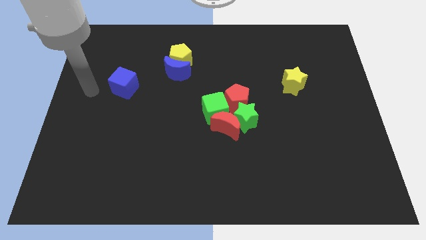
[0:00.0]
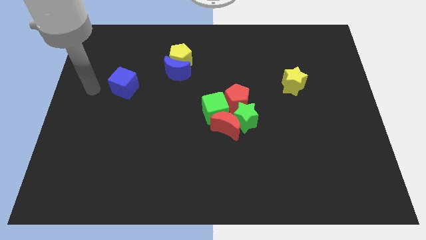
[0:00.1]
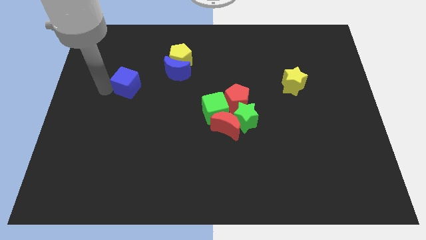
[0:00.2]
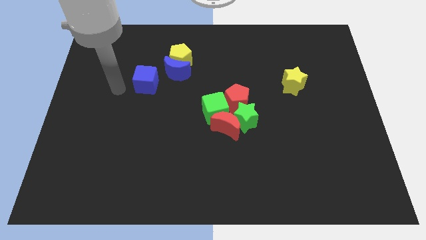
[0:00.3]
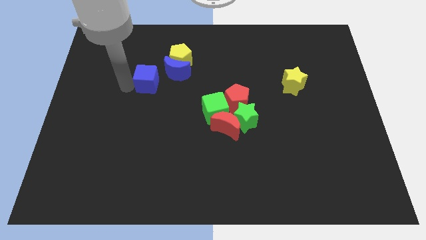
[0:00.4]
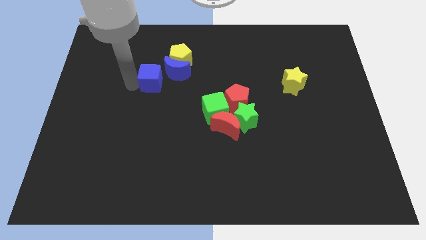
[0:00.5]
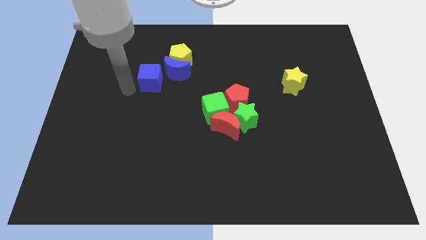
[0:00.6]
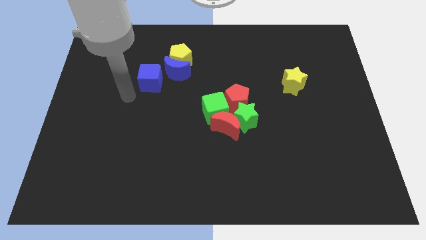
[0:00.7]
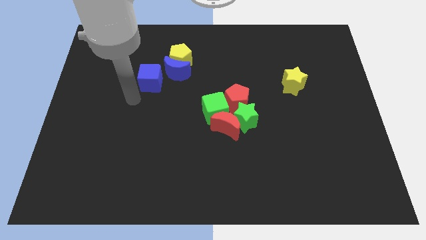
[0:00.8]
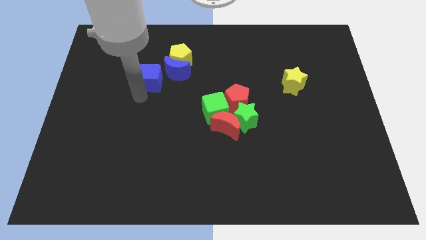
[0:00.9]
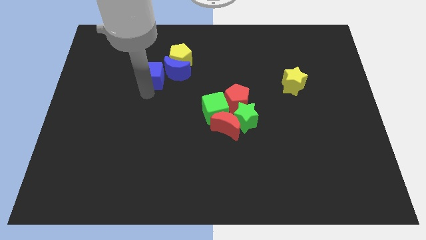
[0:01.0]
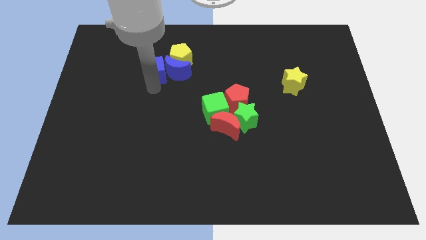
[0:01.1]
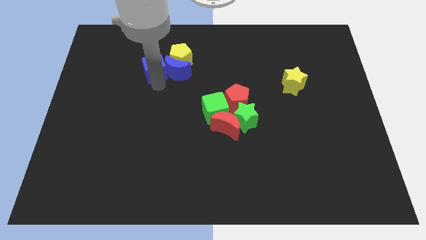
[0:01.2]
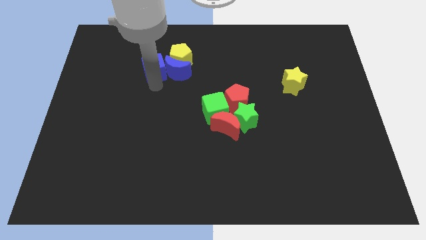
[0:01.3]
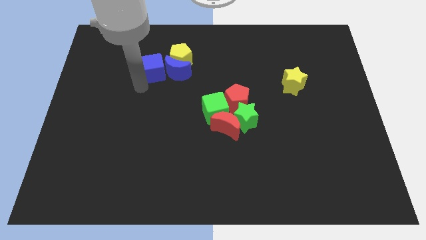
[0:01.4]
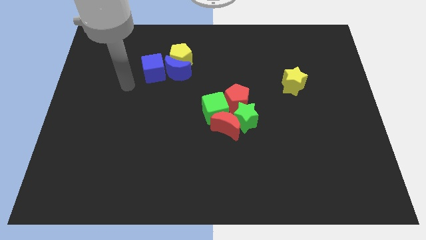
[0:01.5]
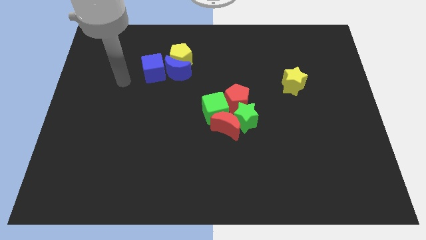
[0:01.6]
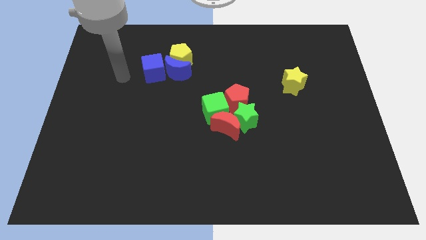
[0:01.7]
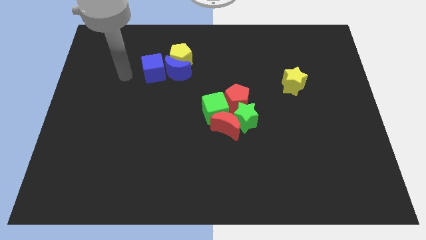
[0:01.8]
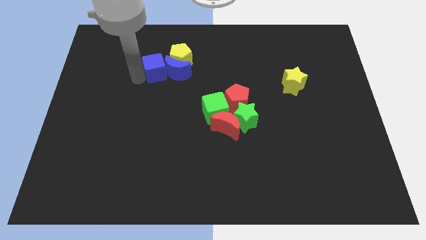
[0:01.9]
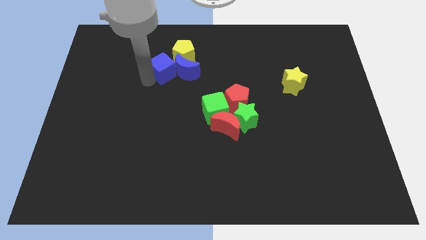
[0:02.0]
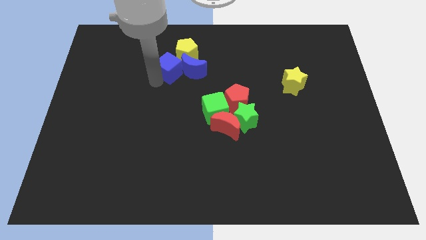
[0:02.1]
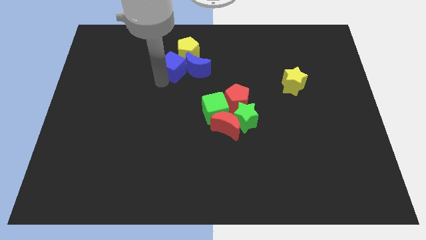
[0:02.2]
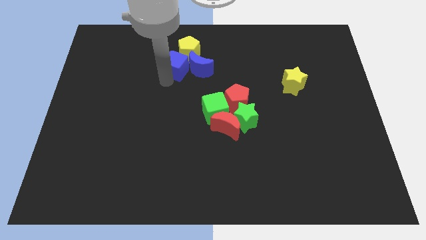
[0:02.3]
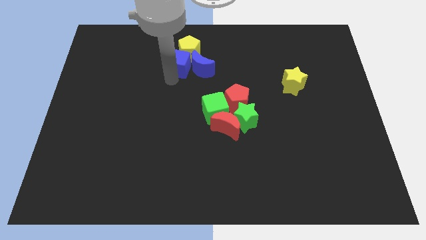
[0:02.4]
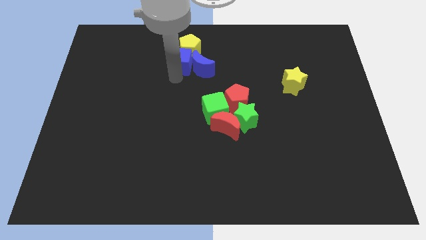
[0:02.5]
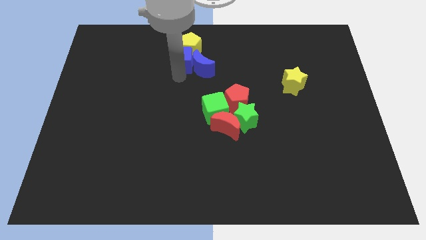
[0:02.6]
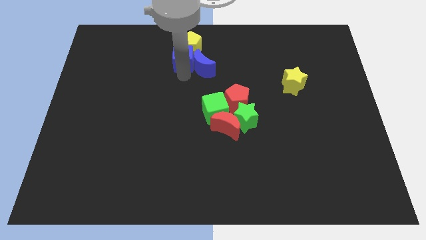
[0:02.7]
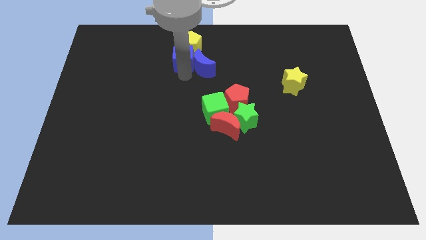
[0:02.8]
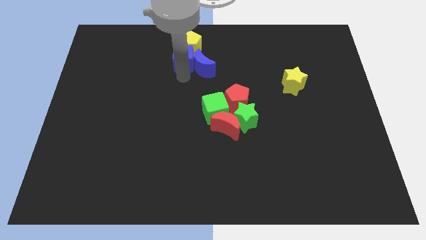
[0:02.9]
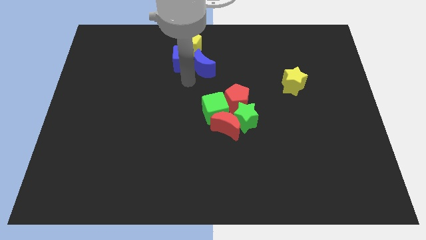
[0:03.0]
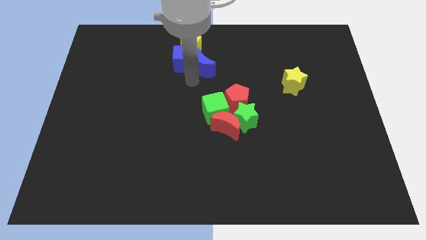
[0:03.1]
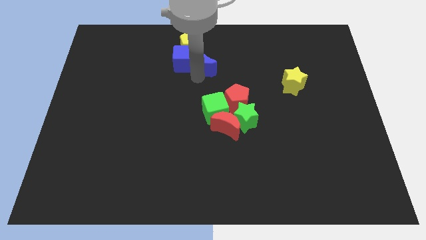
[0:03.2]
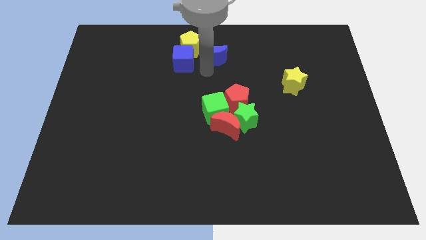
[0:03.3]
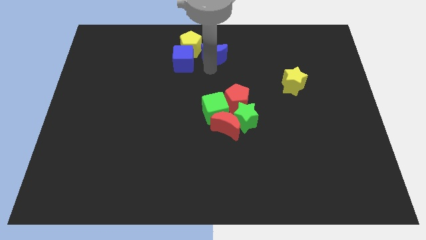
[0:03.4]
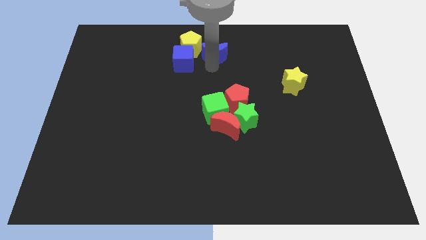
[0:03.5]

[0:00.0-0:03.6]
push blue cube below yellow pentagon

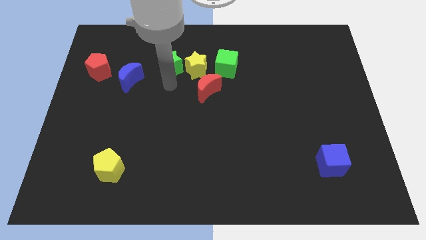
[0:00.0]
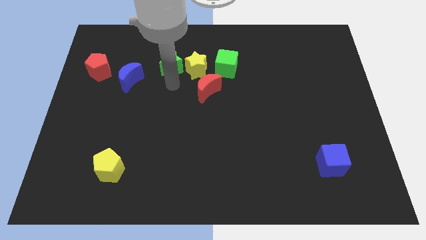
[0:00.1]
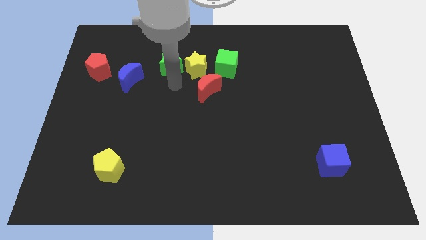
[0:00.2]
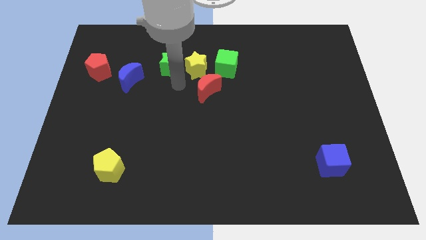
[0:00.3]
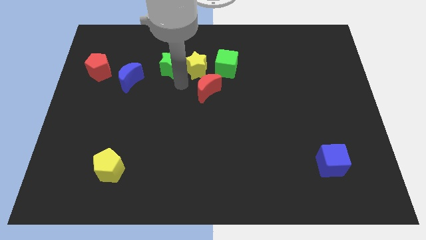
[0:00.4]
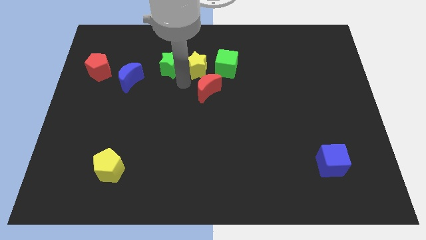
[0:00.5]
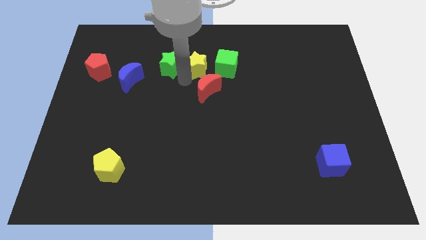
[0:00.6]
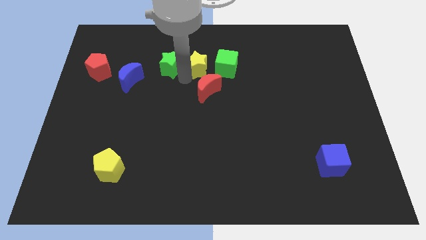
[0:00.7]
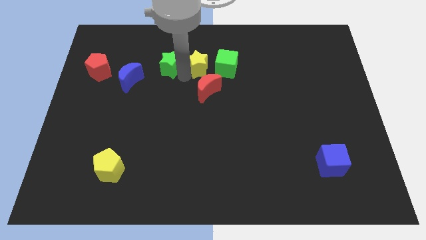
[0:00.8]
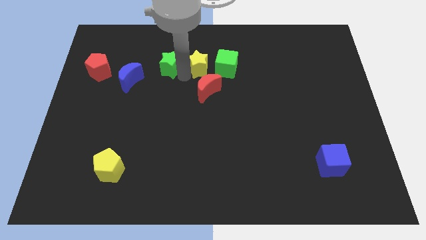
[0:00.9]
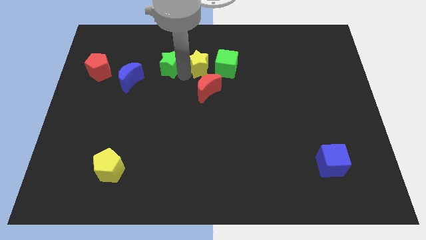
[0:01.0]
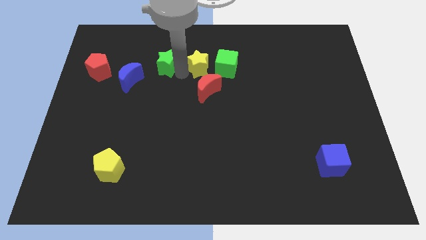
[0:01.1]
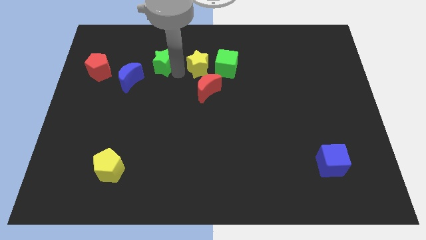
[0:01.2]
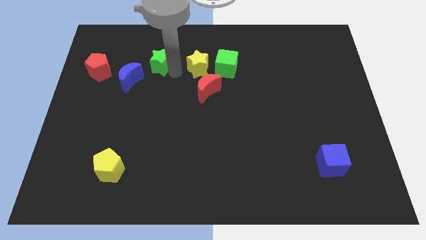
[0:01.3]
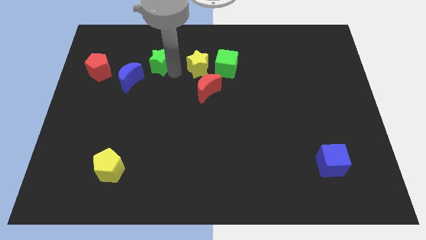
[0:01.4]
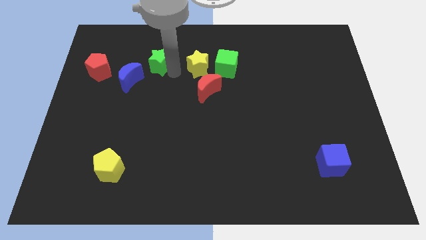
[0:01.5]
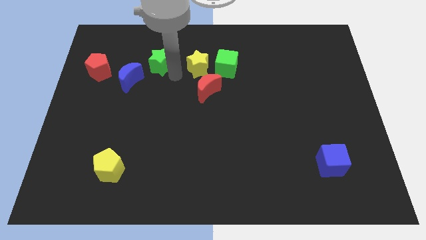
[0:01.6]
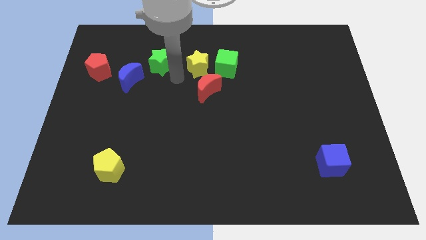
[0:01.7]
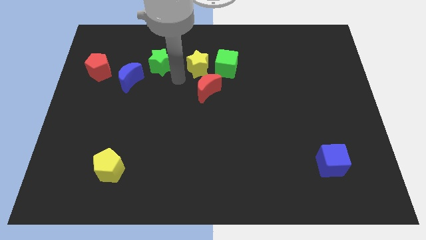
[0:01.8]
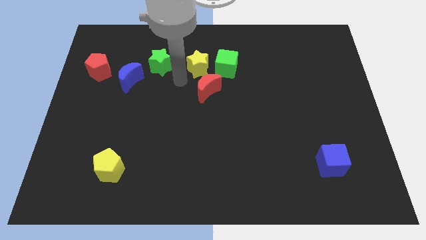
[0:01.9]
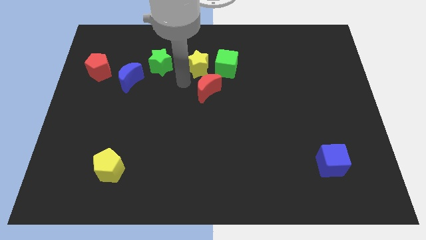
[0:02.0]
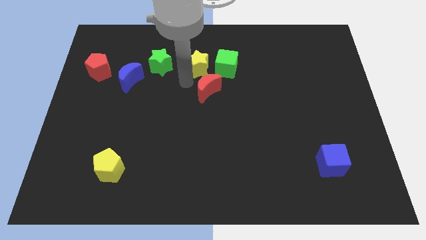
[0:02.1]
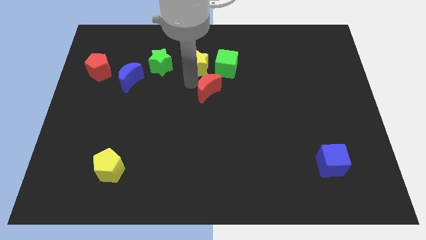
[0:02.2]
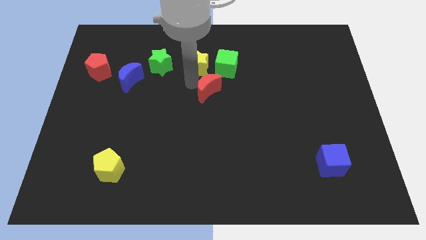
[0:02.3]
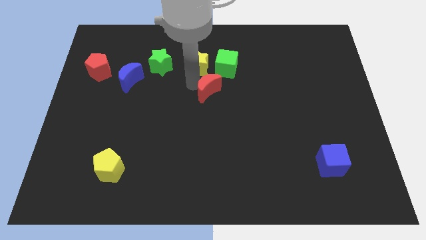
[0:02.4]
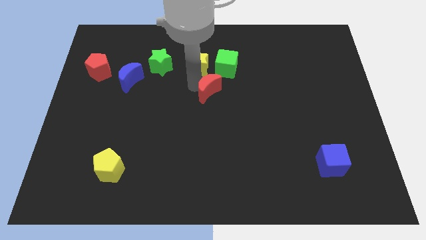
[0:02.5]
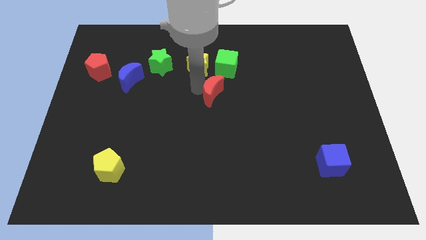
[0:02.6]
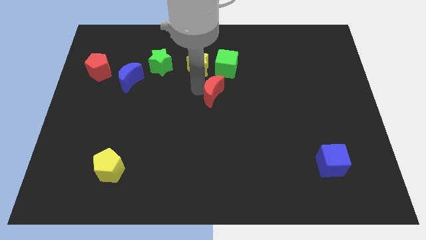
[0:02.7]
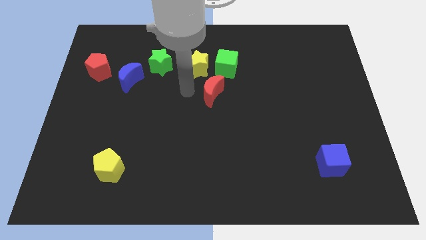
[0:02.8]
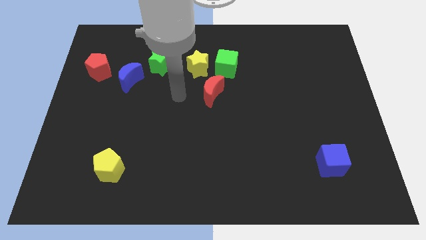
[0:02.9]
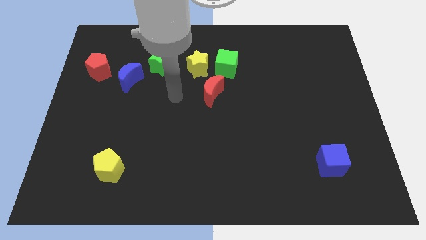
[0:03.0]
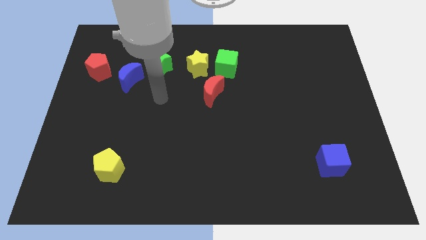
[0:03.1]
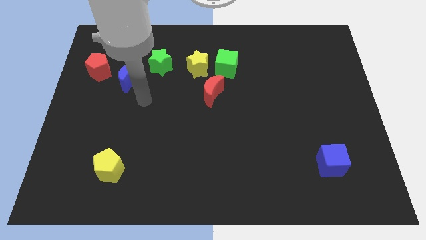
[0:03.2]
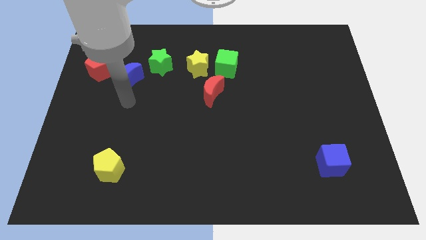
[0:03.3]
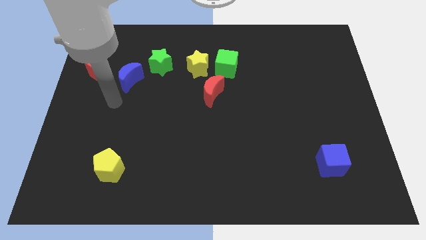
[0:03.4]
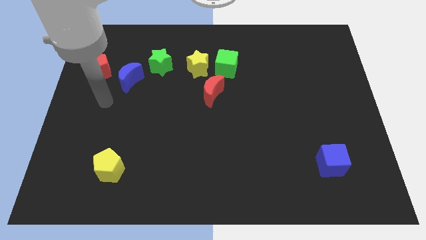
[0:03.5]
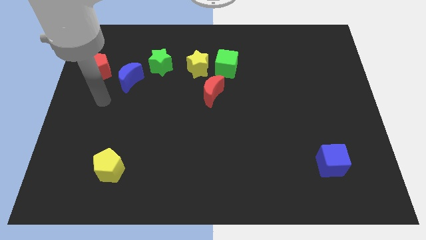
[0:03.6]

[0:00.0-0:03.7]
slightly push the green star towards the blue crescent

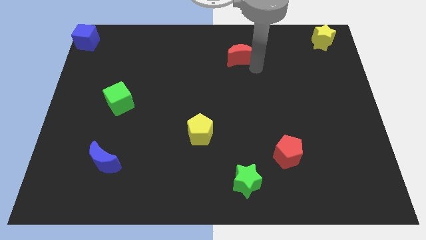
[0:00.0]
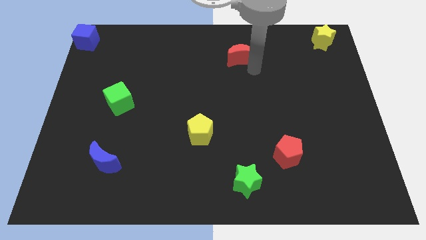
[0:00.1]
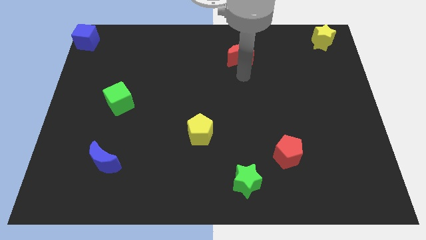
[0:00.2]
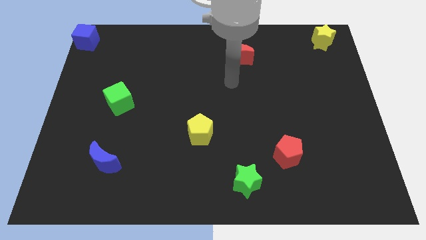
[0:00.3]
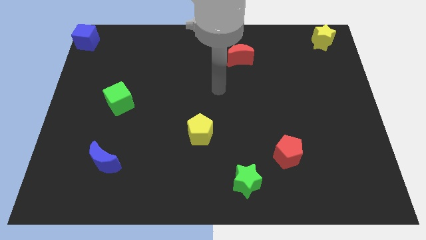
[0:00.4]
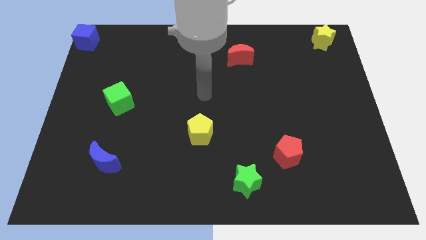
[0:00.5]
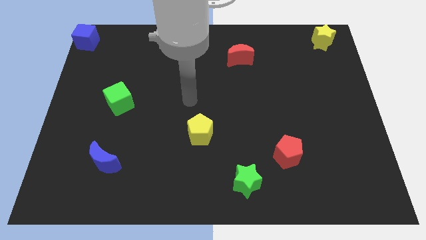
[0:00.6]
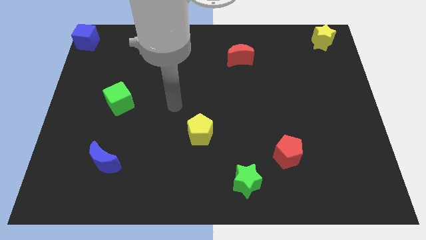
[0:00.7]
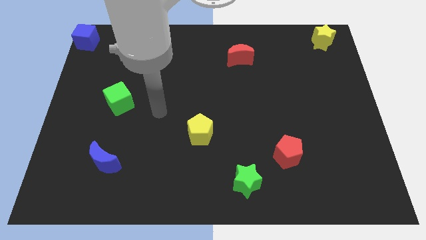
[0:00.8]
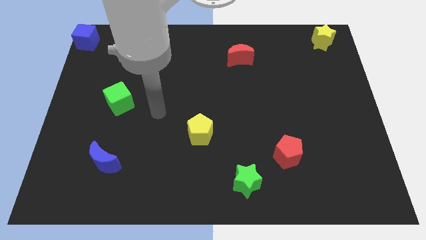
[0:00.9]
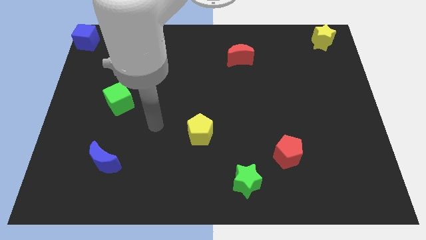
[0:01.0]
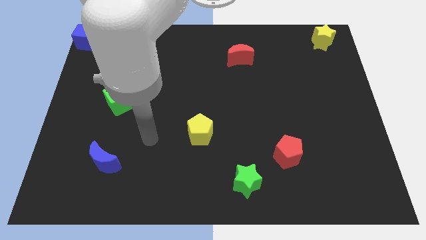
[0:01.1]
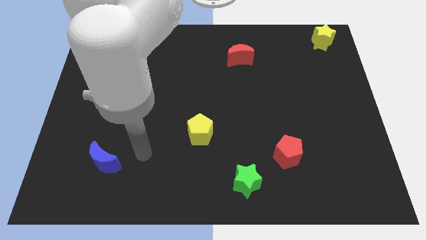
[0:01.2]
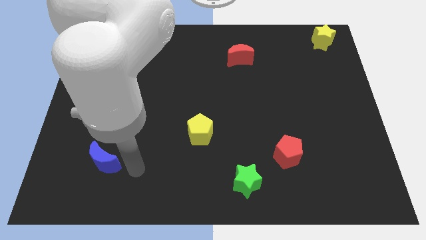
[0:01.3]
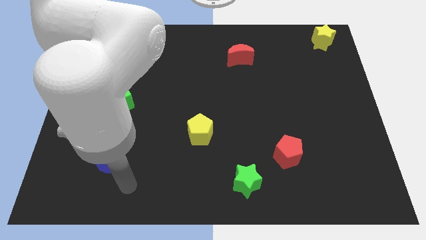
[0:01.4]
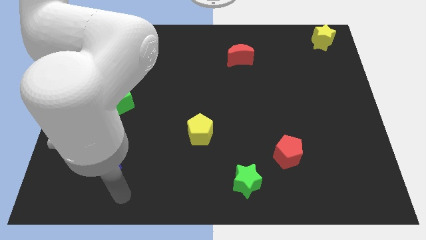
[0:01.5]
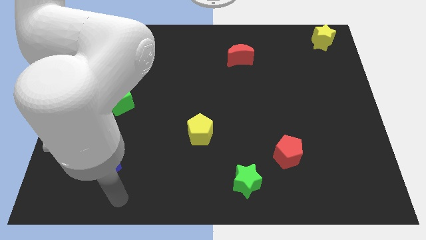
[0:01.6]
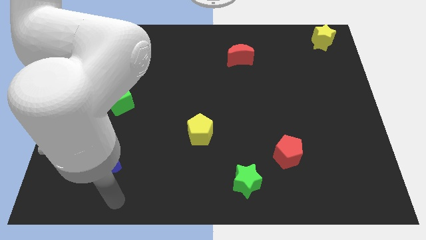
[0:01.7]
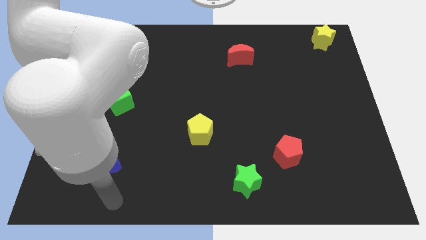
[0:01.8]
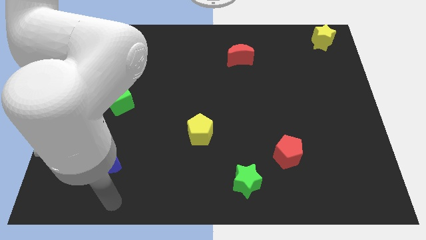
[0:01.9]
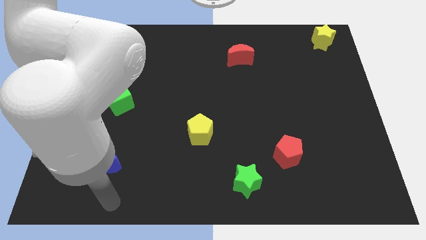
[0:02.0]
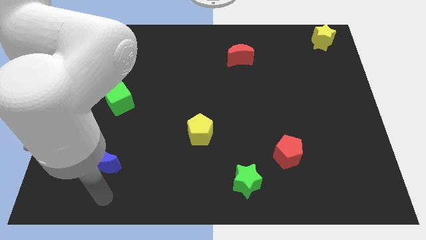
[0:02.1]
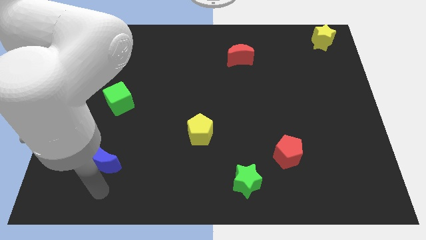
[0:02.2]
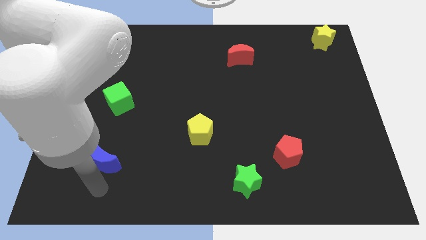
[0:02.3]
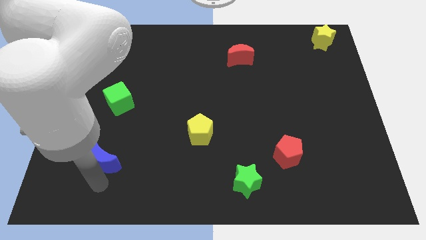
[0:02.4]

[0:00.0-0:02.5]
move the arm towards the blue moon
